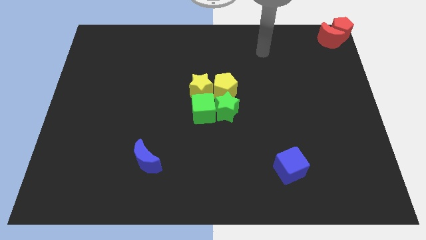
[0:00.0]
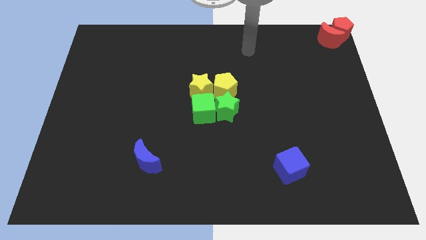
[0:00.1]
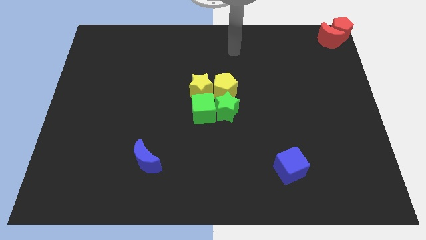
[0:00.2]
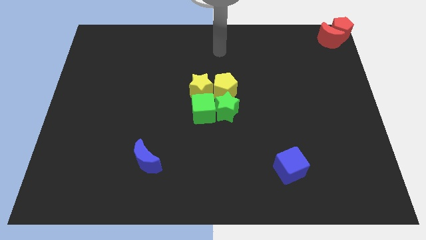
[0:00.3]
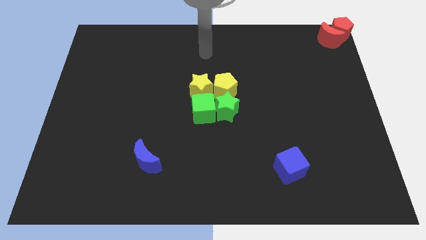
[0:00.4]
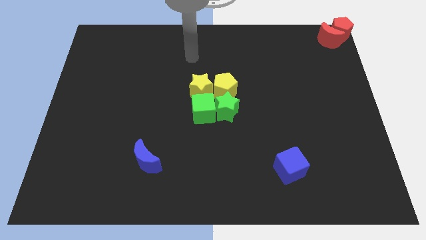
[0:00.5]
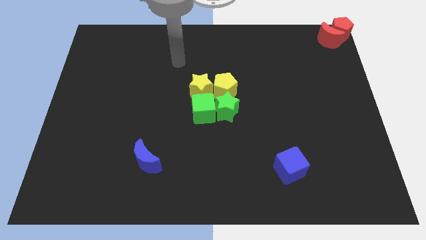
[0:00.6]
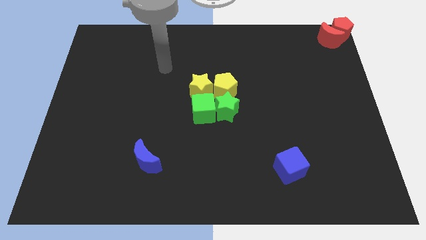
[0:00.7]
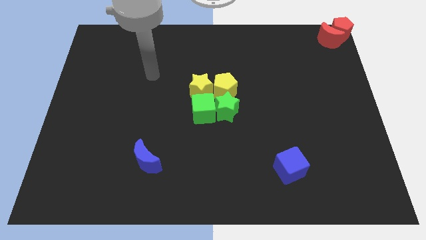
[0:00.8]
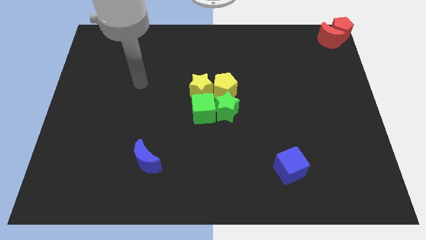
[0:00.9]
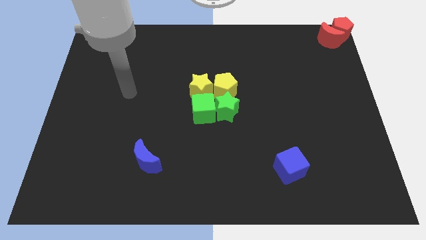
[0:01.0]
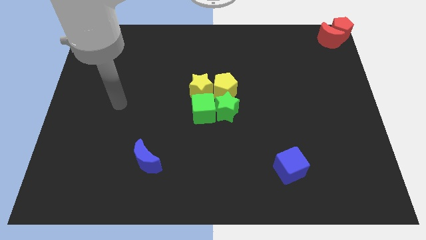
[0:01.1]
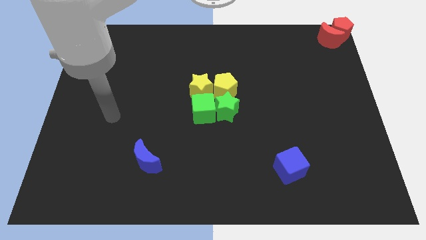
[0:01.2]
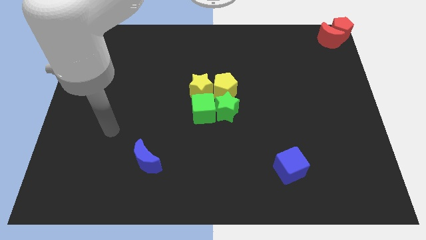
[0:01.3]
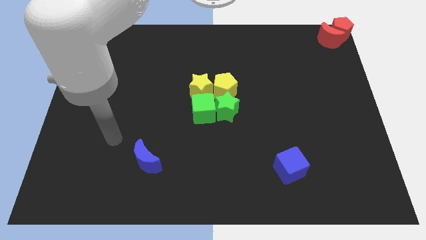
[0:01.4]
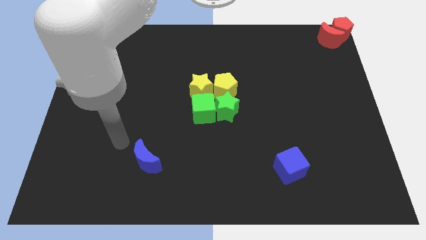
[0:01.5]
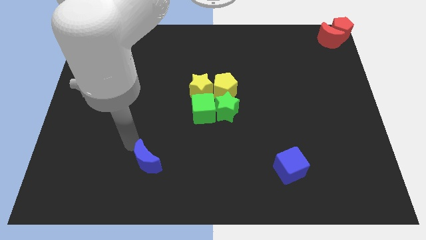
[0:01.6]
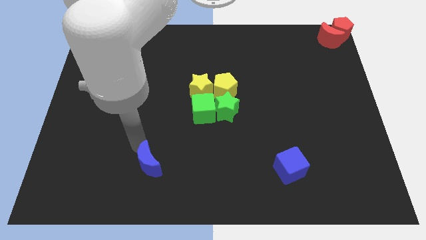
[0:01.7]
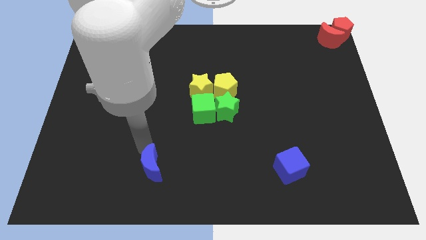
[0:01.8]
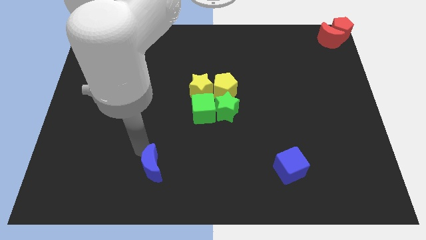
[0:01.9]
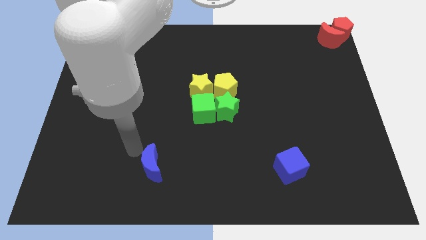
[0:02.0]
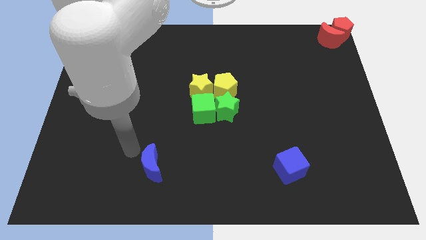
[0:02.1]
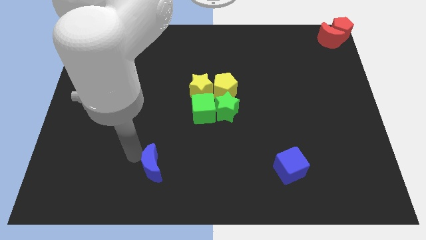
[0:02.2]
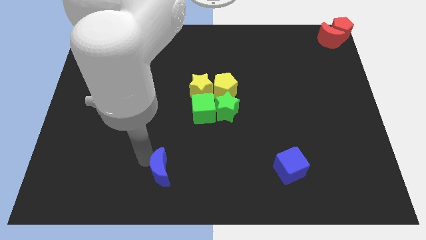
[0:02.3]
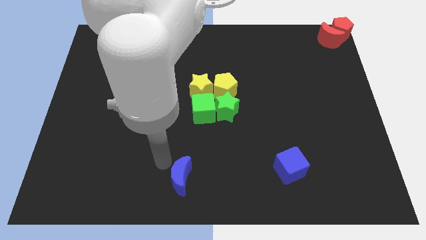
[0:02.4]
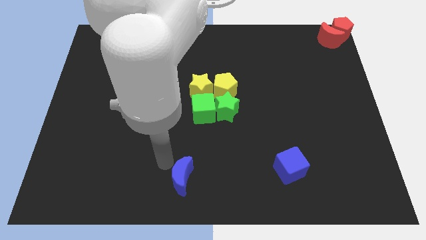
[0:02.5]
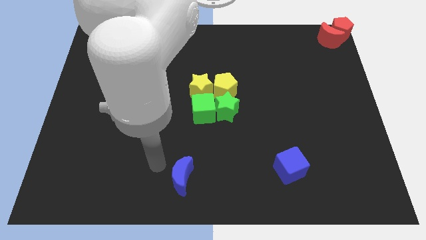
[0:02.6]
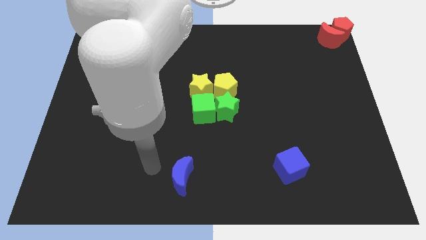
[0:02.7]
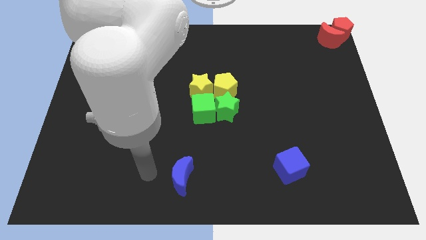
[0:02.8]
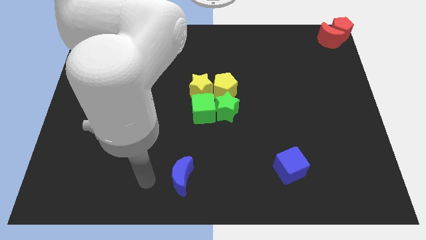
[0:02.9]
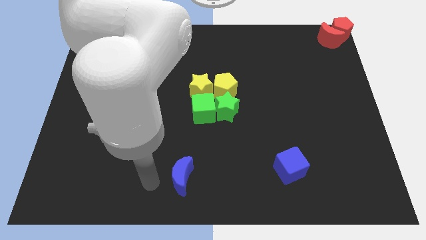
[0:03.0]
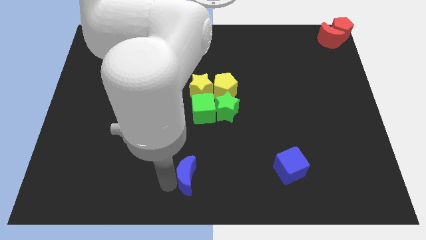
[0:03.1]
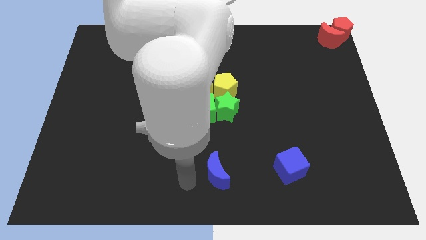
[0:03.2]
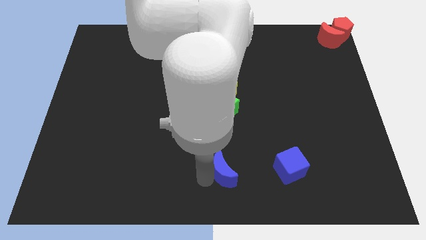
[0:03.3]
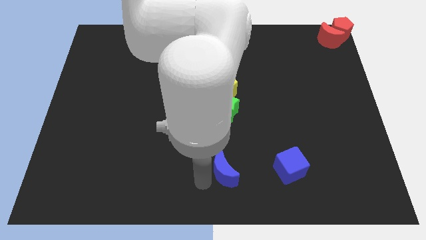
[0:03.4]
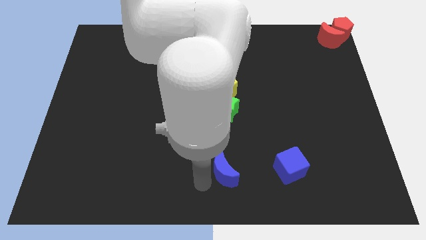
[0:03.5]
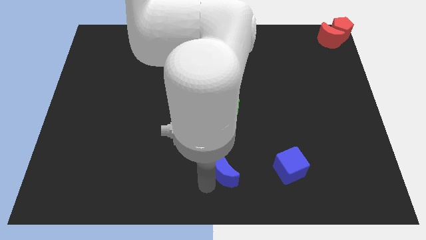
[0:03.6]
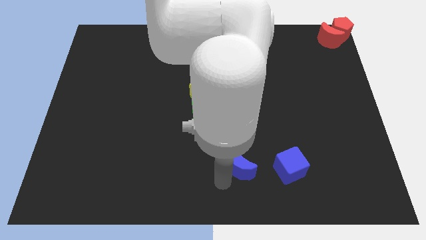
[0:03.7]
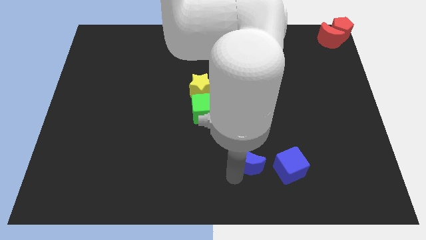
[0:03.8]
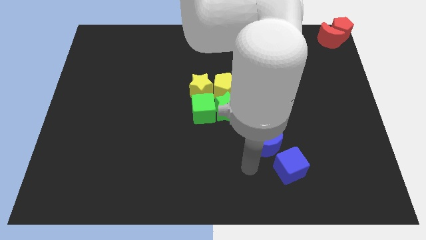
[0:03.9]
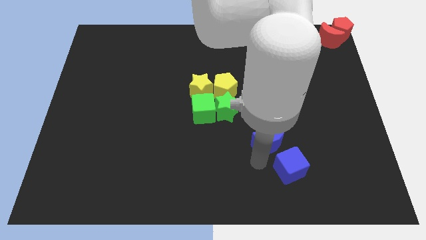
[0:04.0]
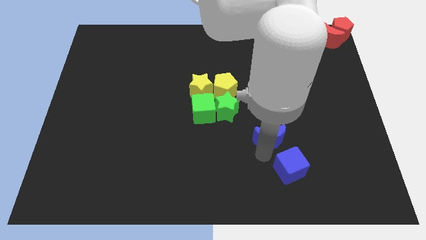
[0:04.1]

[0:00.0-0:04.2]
move the blue crescent above the blue cube

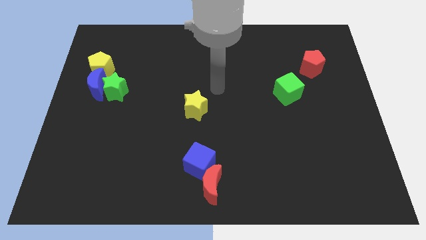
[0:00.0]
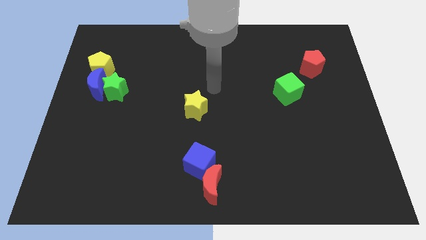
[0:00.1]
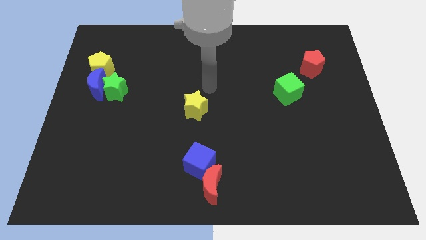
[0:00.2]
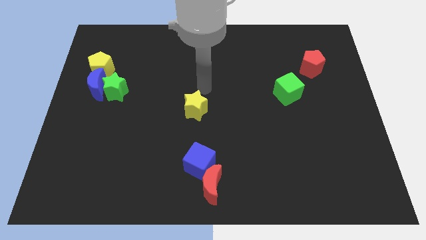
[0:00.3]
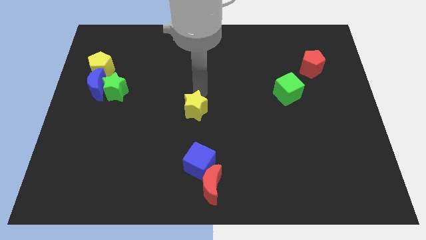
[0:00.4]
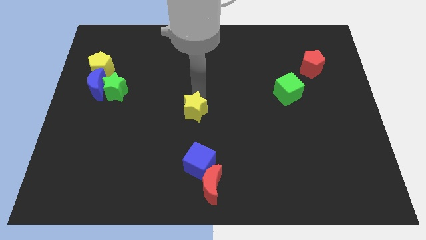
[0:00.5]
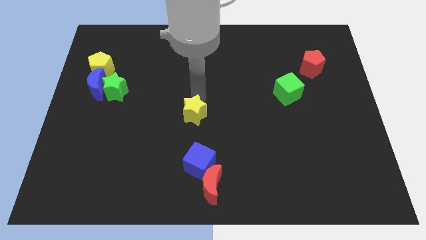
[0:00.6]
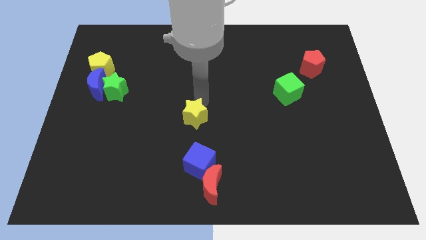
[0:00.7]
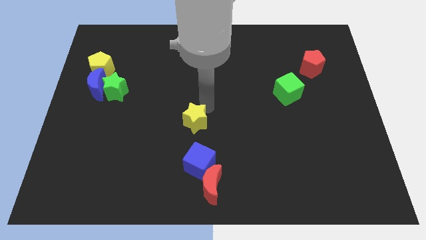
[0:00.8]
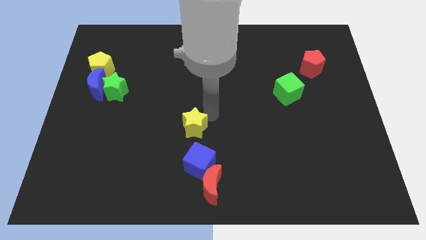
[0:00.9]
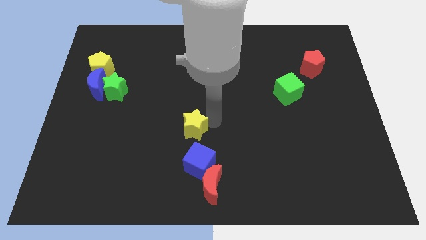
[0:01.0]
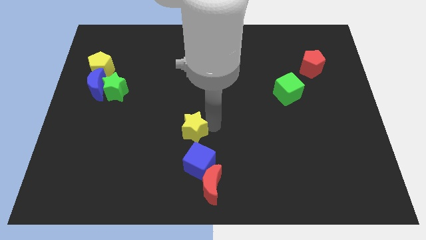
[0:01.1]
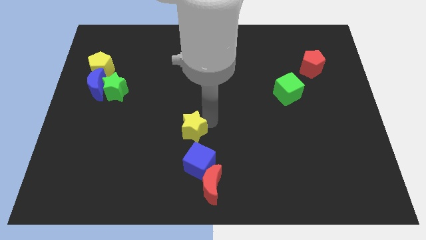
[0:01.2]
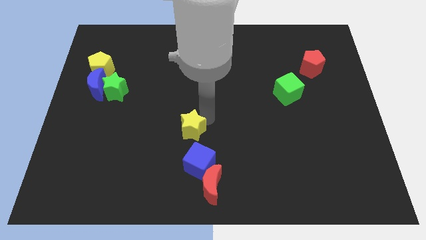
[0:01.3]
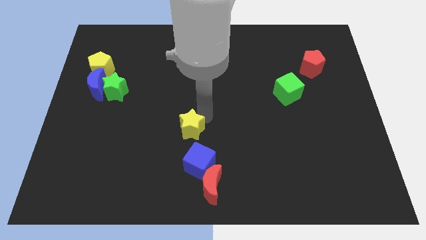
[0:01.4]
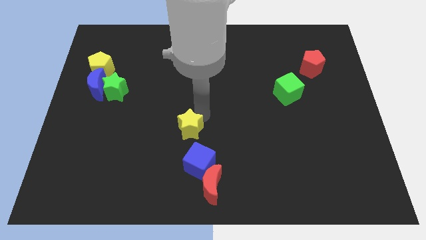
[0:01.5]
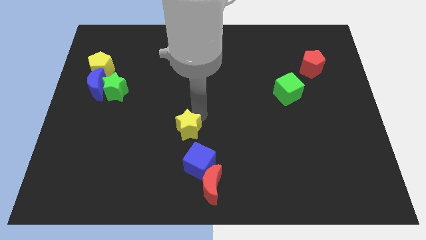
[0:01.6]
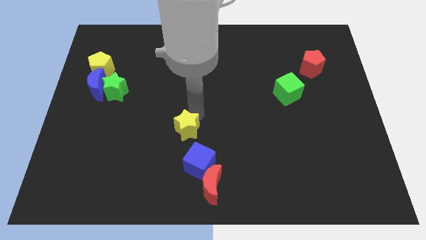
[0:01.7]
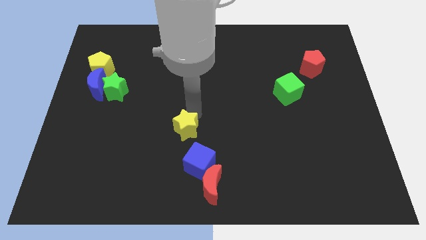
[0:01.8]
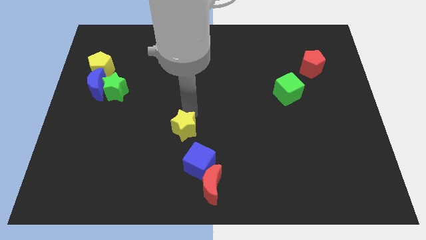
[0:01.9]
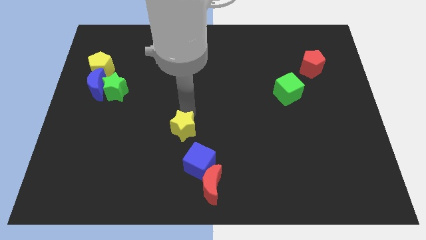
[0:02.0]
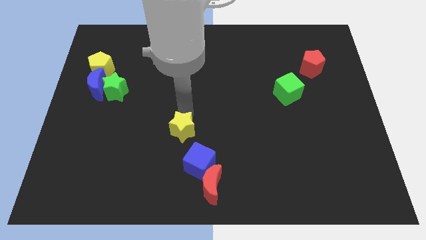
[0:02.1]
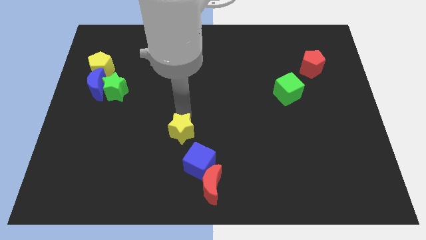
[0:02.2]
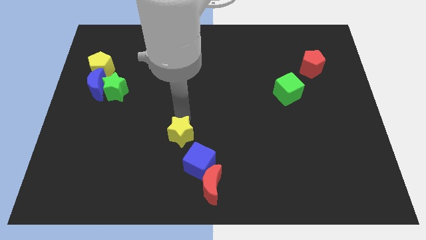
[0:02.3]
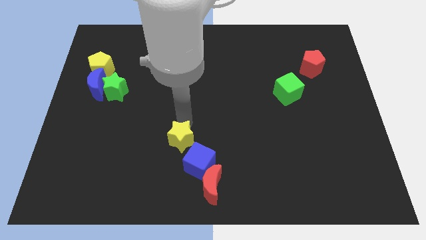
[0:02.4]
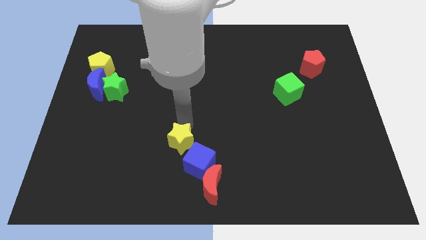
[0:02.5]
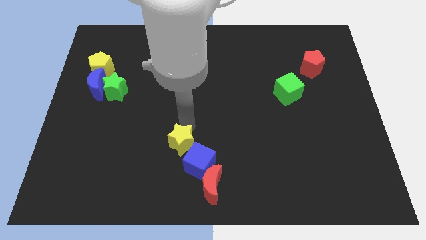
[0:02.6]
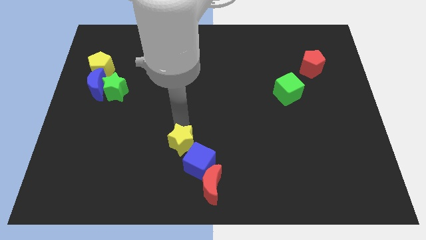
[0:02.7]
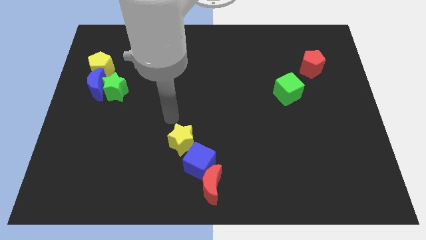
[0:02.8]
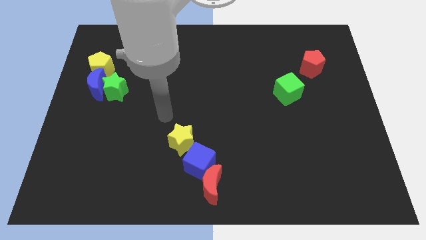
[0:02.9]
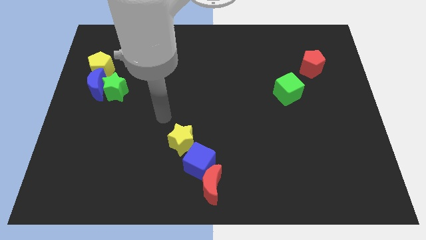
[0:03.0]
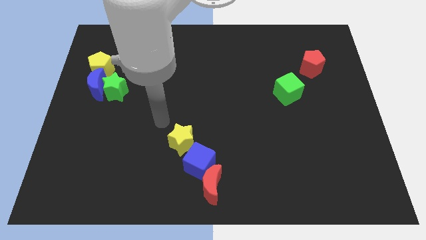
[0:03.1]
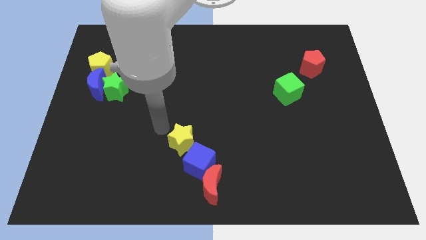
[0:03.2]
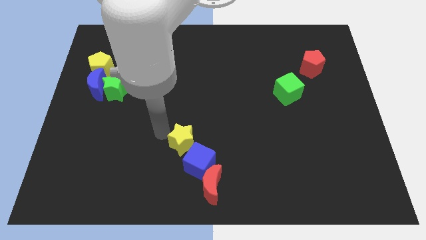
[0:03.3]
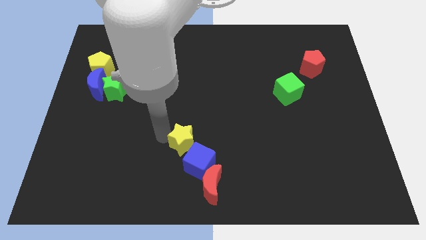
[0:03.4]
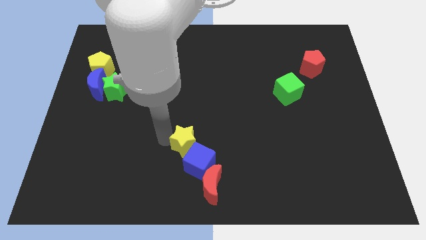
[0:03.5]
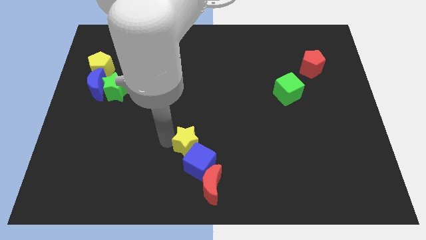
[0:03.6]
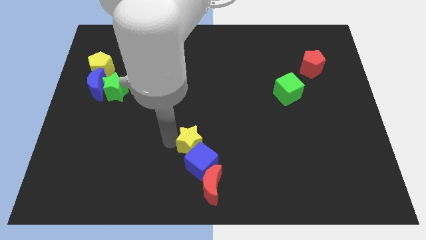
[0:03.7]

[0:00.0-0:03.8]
push the yellow star to the top left of the blue cube

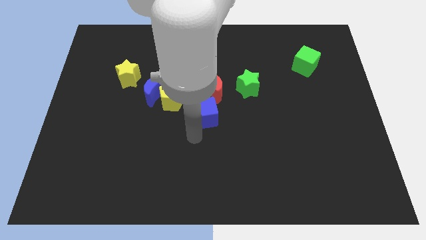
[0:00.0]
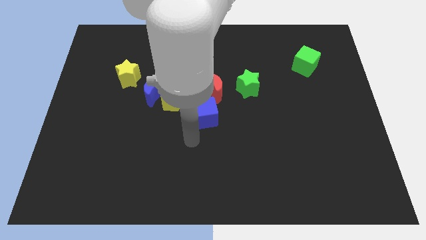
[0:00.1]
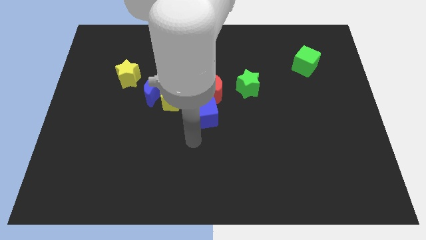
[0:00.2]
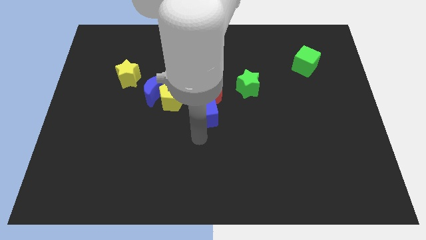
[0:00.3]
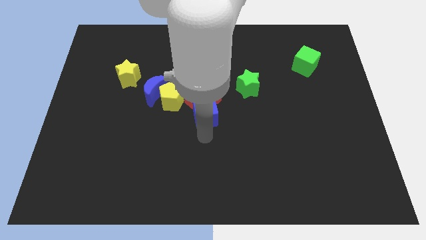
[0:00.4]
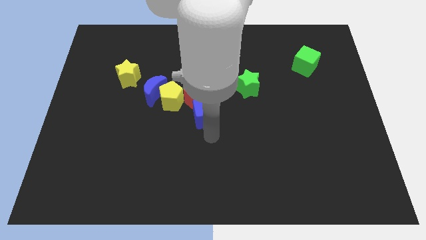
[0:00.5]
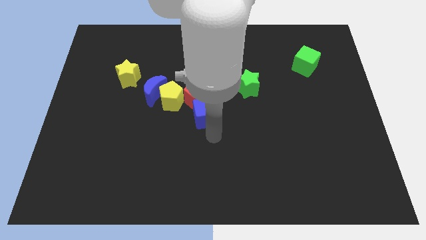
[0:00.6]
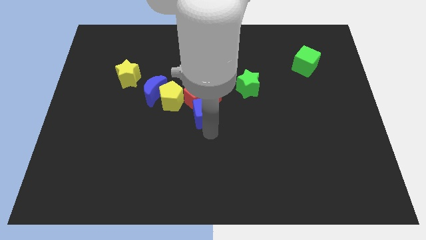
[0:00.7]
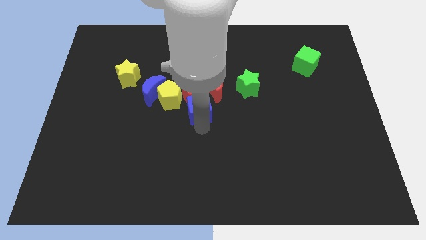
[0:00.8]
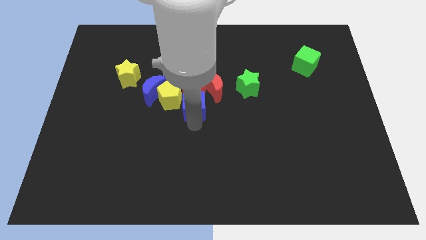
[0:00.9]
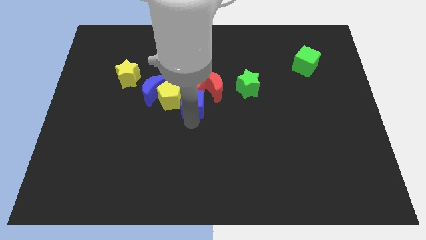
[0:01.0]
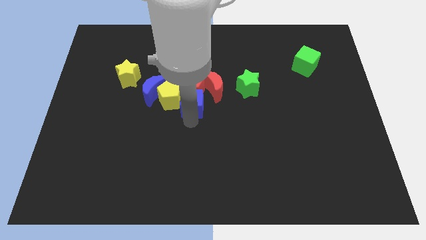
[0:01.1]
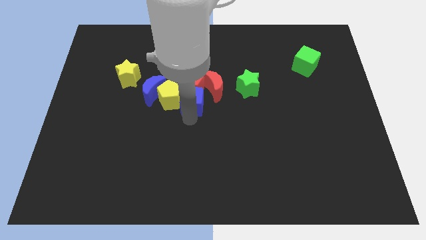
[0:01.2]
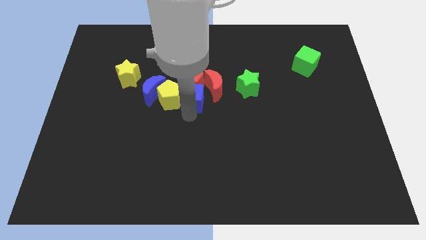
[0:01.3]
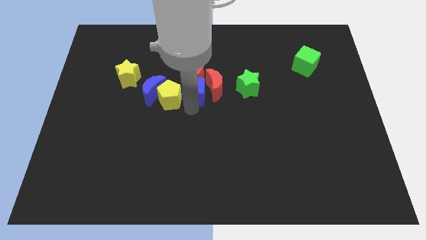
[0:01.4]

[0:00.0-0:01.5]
place blue cube to the right of the yellow pentagon
